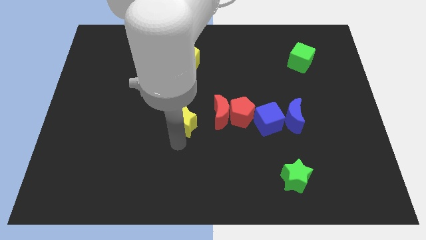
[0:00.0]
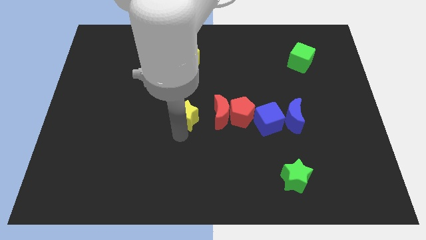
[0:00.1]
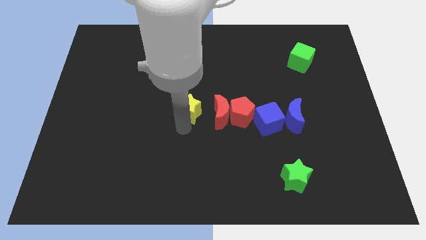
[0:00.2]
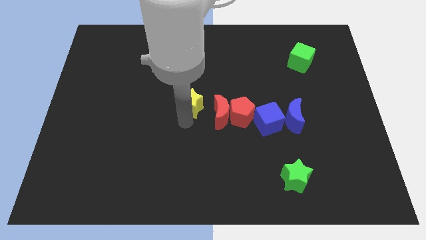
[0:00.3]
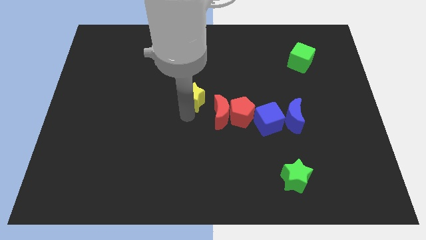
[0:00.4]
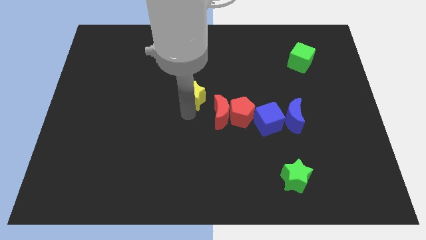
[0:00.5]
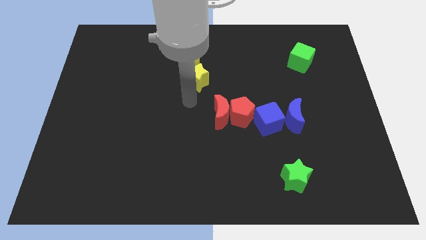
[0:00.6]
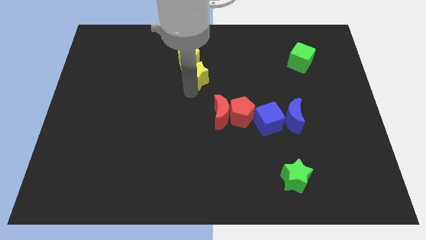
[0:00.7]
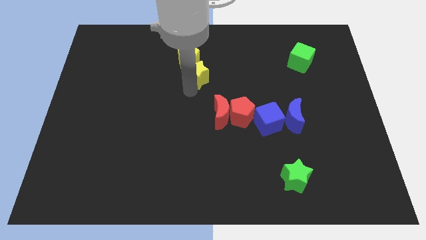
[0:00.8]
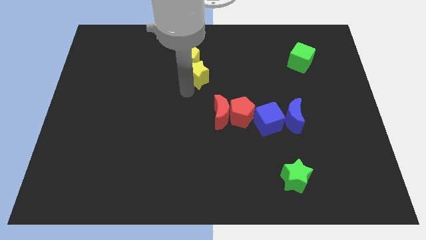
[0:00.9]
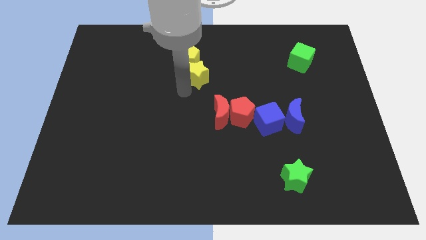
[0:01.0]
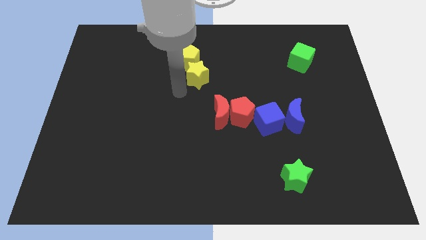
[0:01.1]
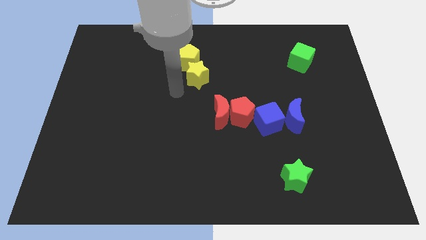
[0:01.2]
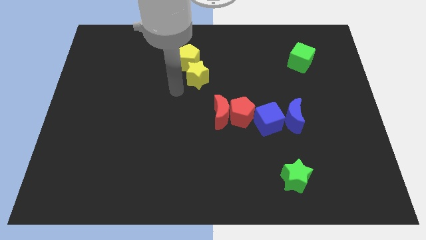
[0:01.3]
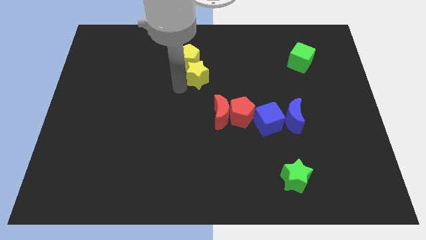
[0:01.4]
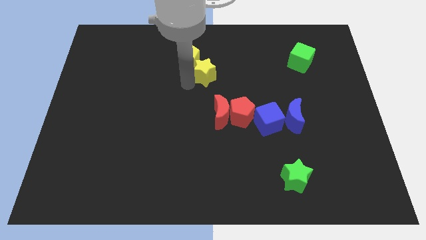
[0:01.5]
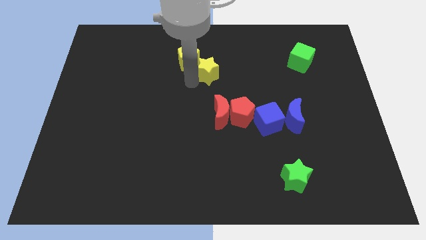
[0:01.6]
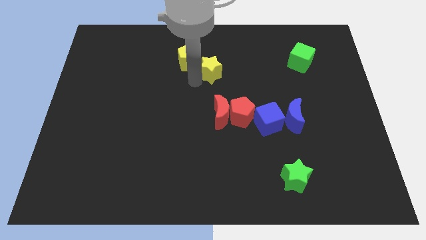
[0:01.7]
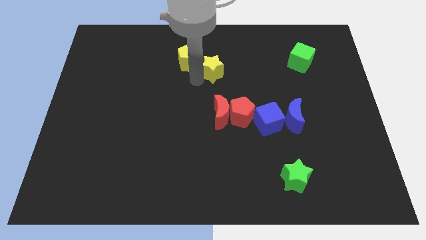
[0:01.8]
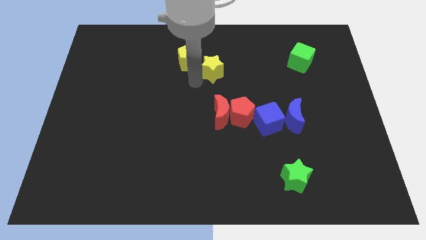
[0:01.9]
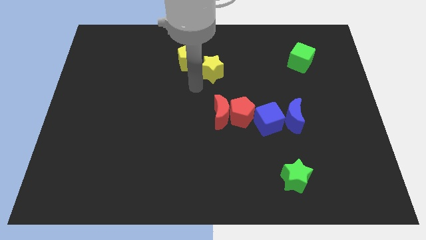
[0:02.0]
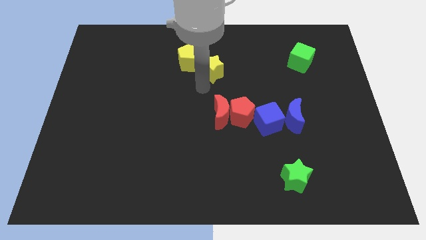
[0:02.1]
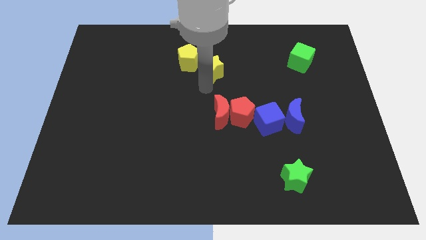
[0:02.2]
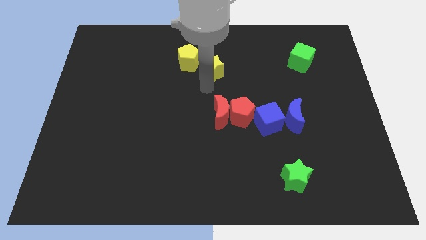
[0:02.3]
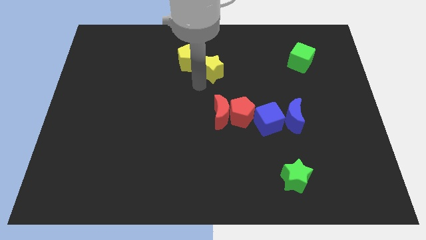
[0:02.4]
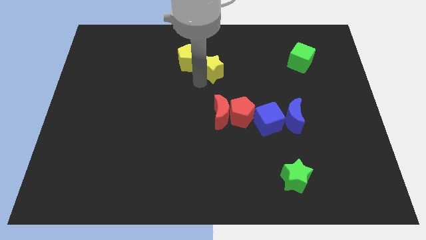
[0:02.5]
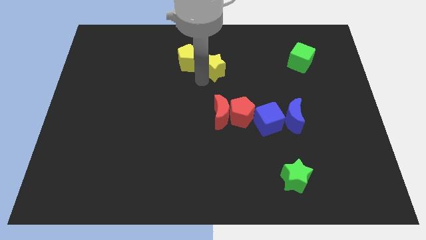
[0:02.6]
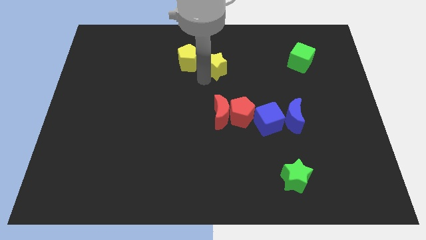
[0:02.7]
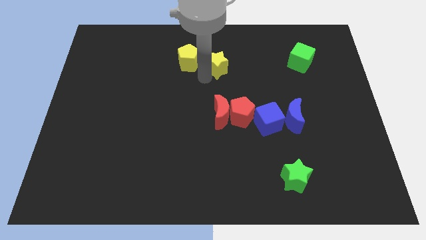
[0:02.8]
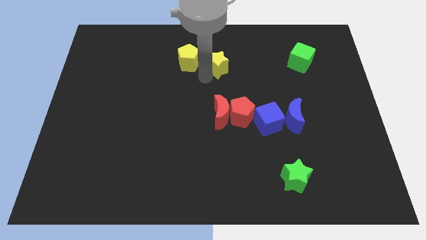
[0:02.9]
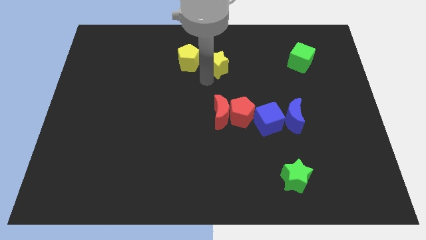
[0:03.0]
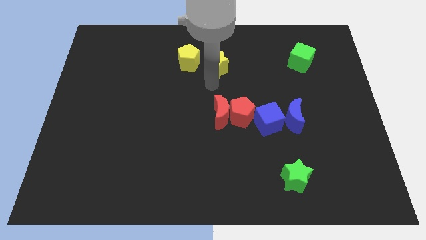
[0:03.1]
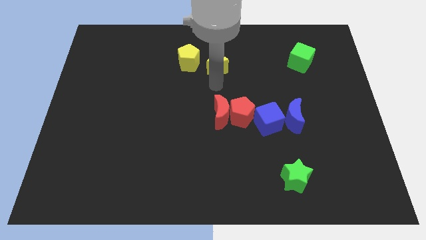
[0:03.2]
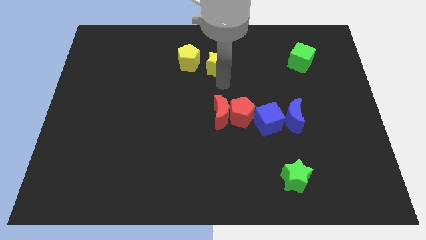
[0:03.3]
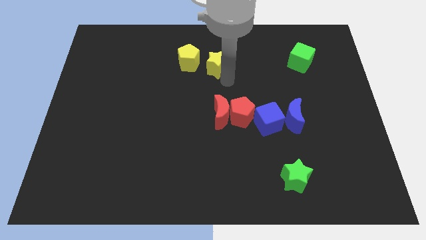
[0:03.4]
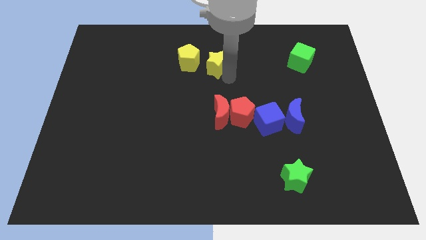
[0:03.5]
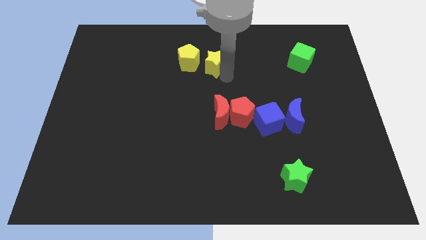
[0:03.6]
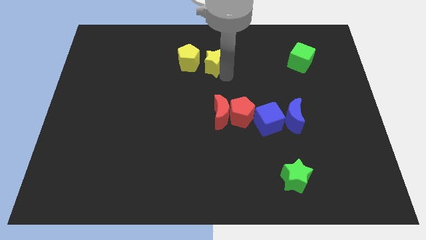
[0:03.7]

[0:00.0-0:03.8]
move the yellow star right to the yellow pentagon

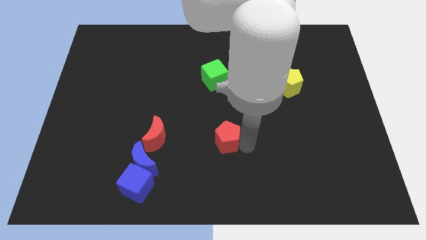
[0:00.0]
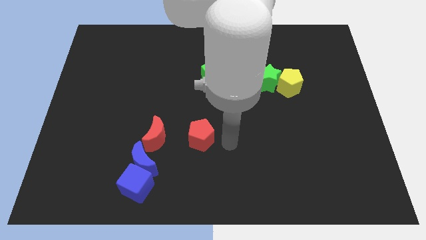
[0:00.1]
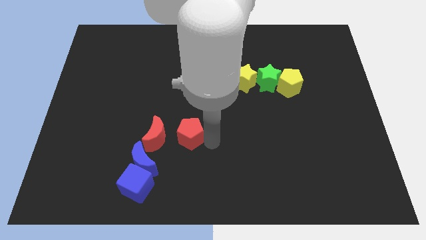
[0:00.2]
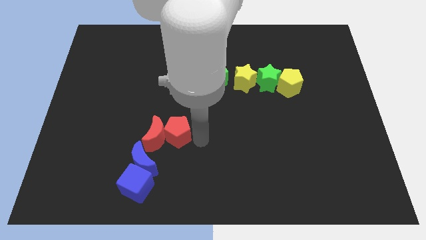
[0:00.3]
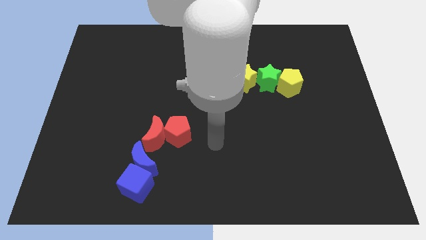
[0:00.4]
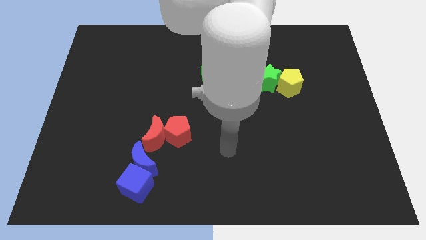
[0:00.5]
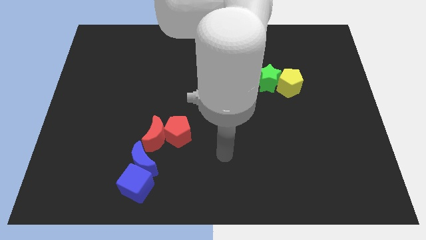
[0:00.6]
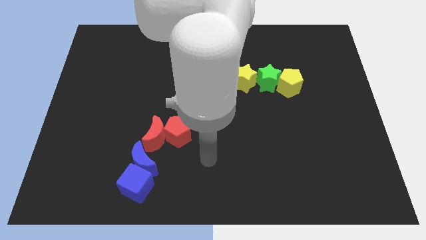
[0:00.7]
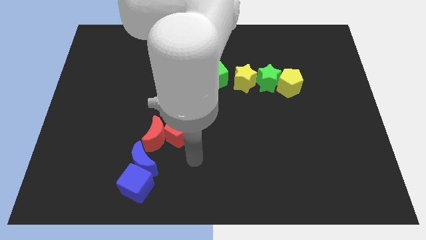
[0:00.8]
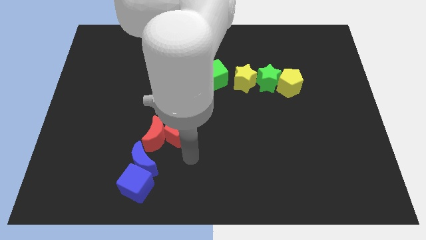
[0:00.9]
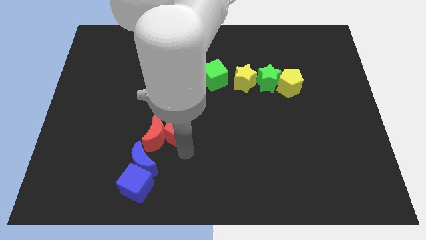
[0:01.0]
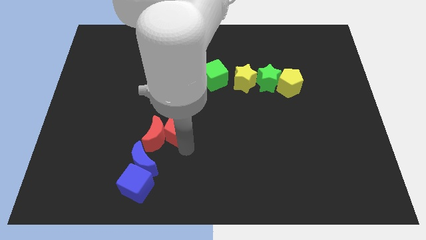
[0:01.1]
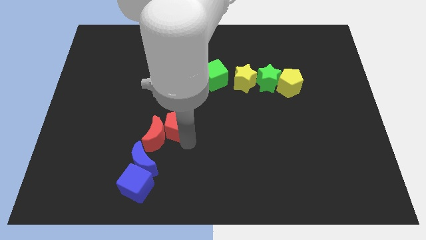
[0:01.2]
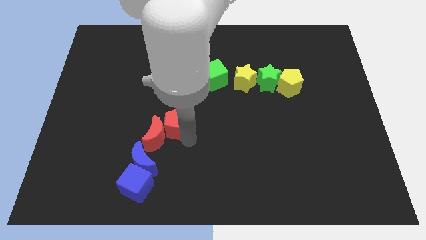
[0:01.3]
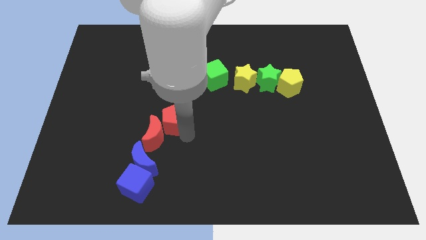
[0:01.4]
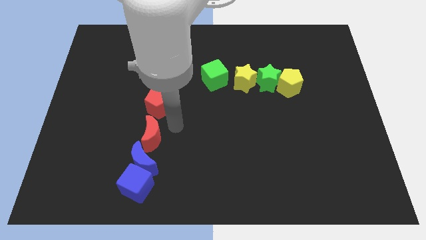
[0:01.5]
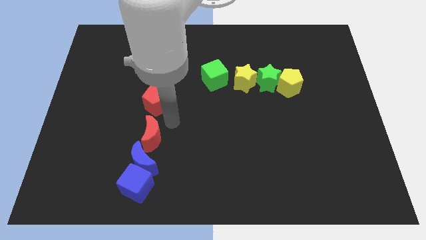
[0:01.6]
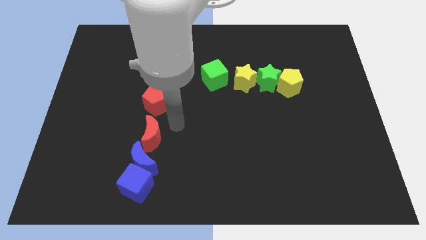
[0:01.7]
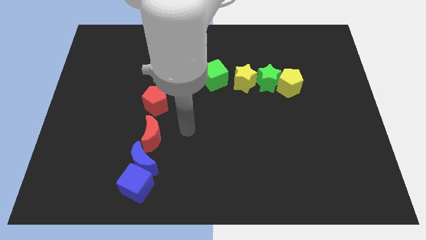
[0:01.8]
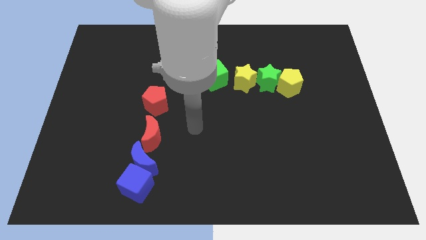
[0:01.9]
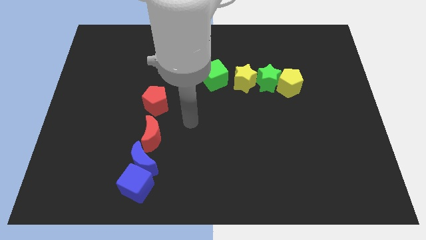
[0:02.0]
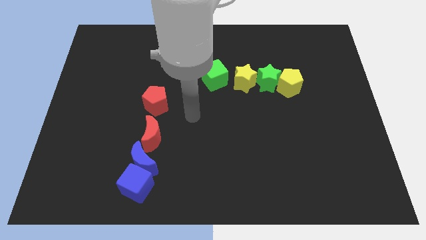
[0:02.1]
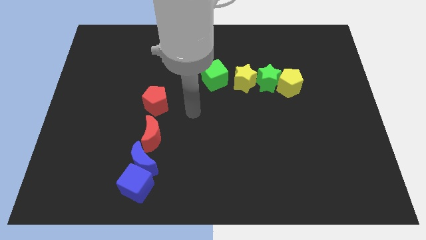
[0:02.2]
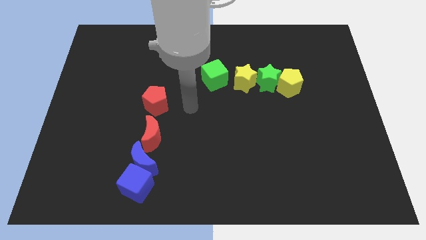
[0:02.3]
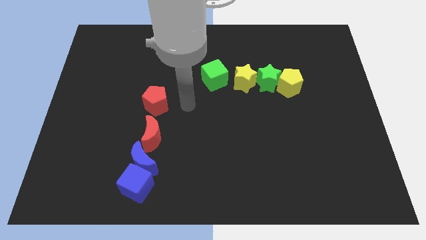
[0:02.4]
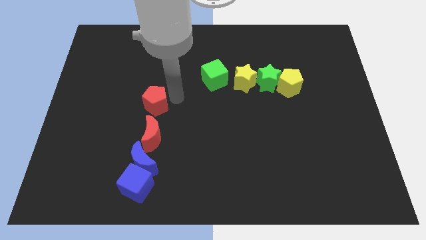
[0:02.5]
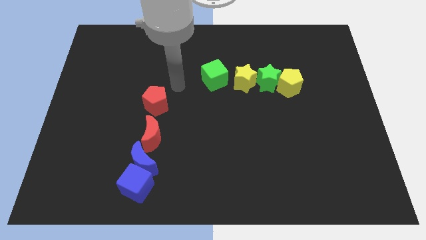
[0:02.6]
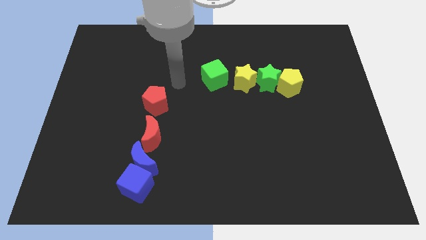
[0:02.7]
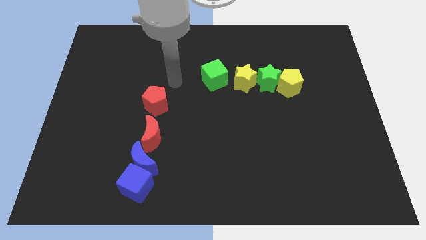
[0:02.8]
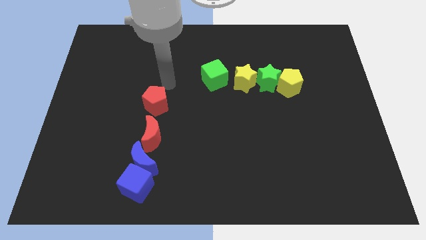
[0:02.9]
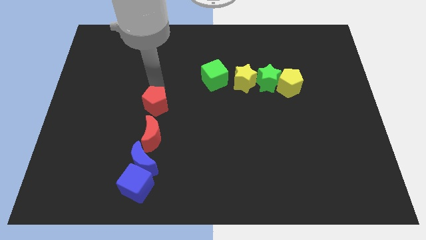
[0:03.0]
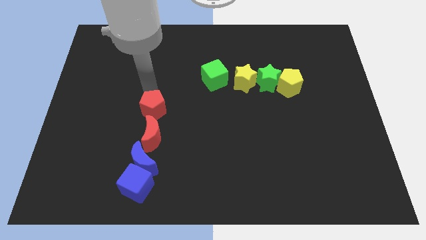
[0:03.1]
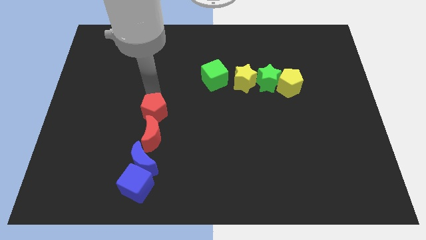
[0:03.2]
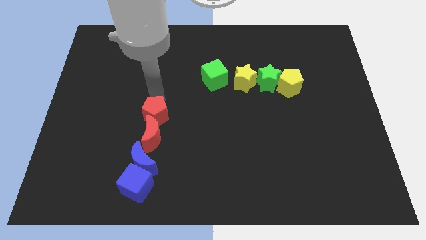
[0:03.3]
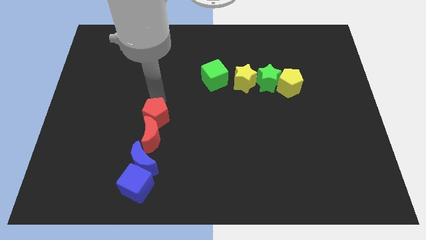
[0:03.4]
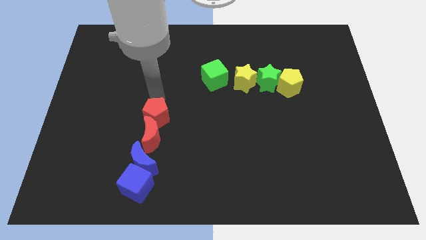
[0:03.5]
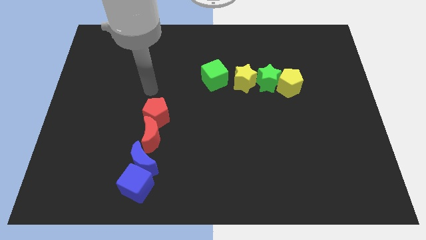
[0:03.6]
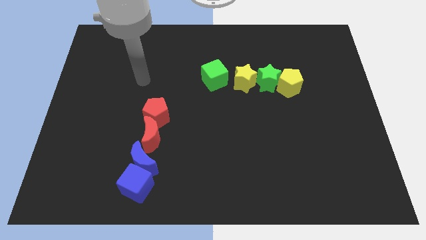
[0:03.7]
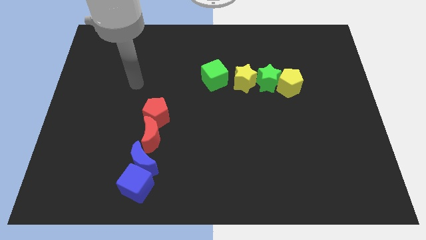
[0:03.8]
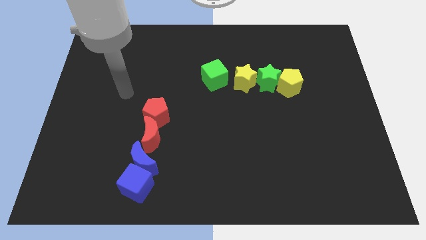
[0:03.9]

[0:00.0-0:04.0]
push the red pentagon into the red moon

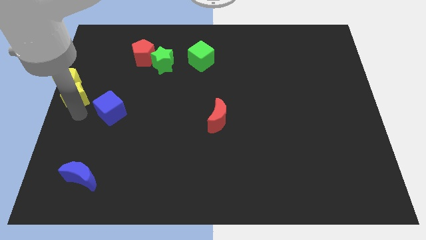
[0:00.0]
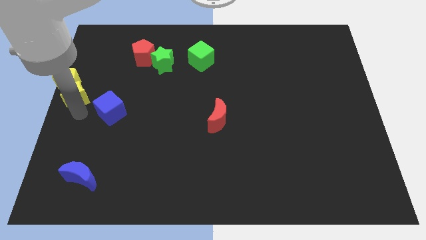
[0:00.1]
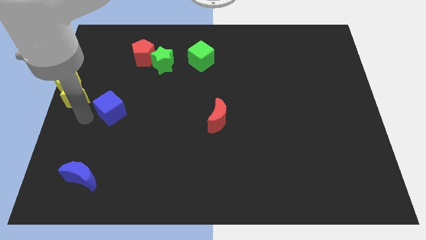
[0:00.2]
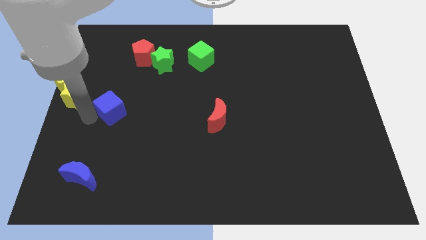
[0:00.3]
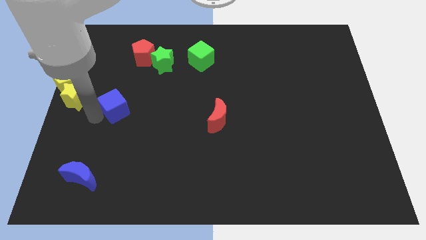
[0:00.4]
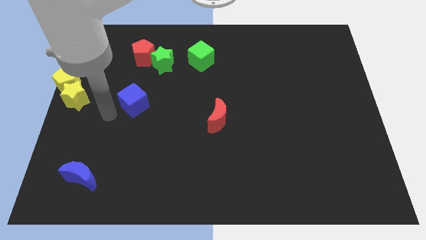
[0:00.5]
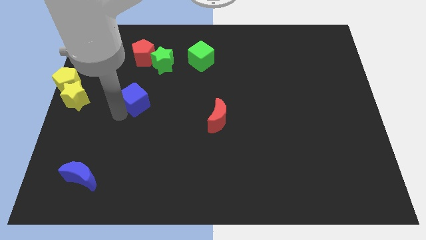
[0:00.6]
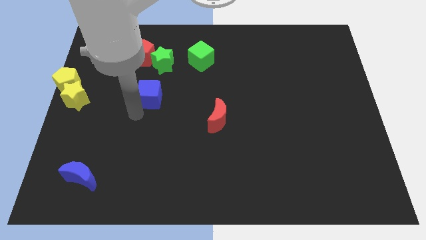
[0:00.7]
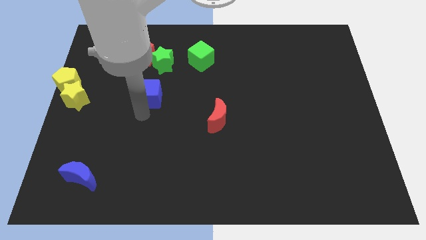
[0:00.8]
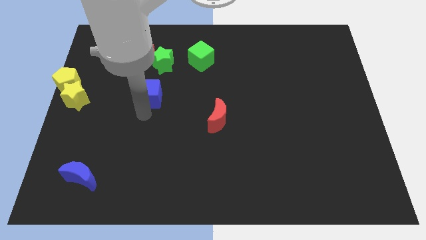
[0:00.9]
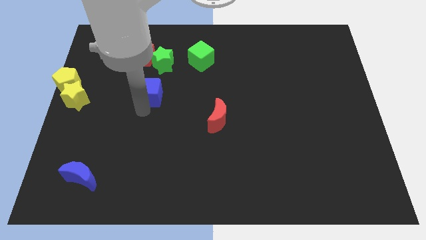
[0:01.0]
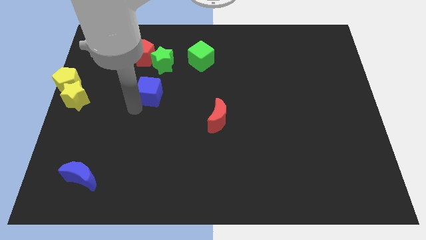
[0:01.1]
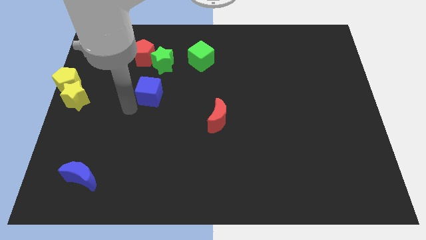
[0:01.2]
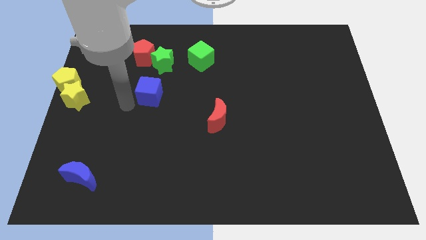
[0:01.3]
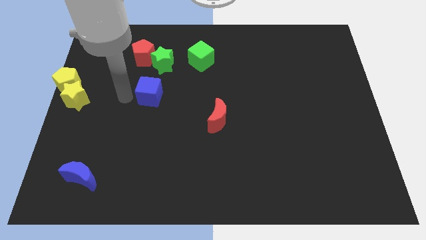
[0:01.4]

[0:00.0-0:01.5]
place the blue cube diagonal to the right of the yellow star
